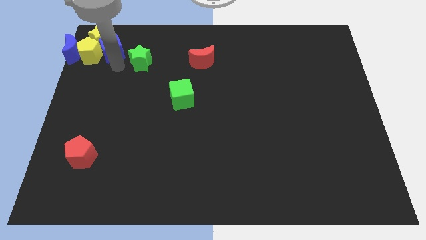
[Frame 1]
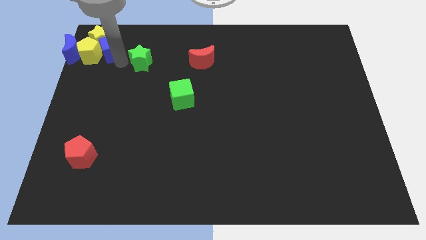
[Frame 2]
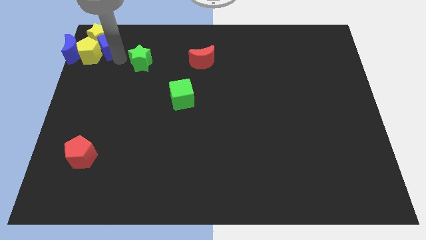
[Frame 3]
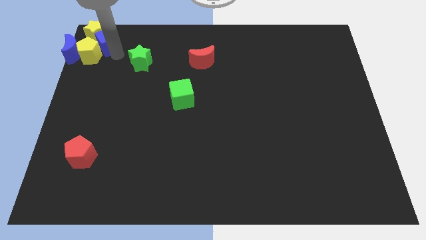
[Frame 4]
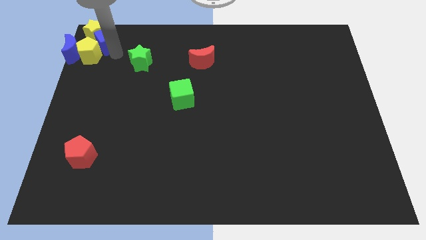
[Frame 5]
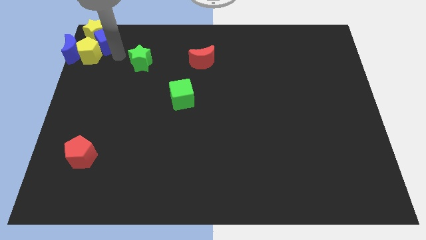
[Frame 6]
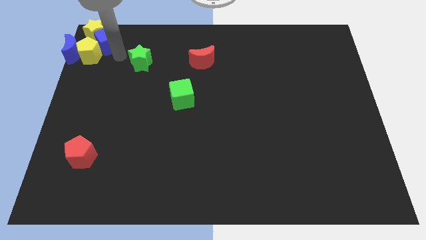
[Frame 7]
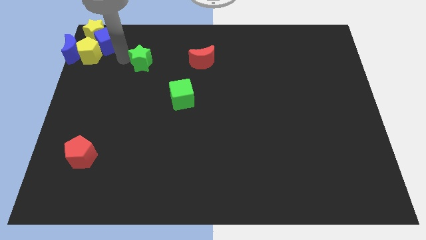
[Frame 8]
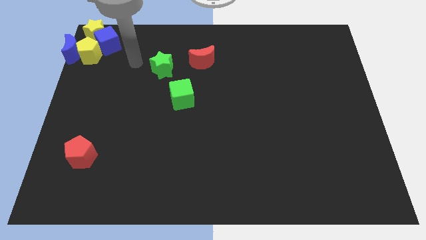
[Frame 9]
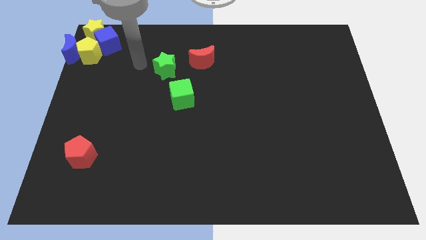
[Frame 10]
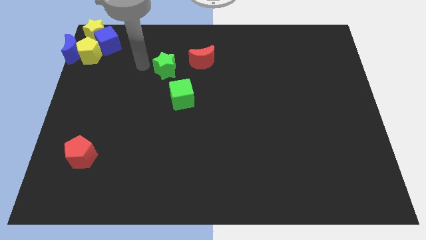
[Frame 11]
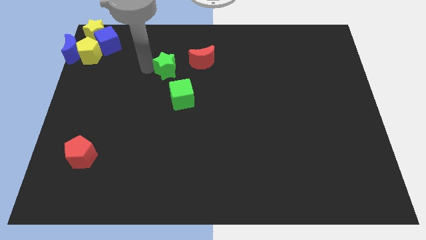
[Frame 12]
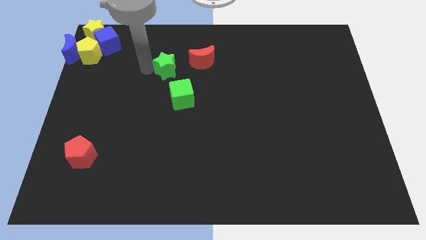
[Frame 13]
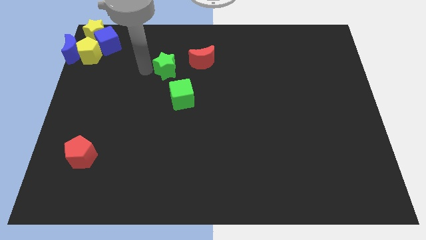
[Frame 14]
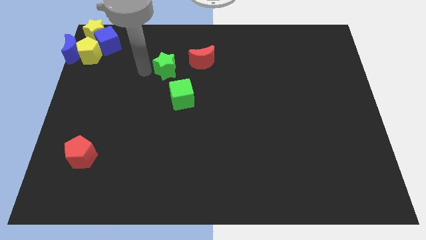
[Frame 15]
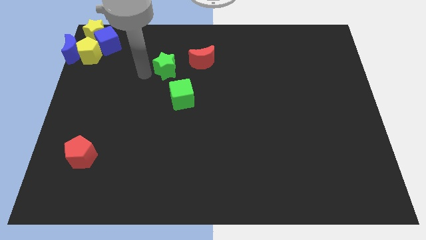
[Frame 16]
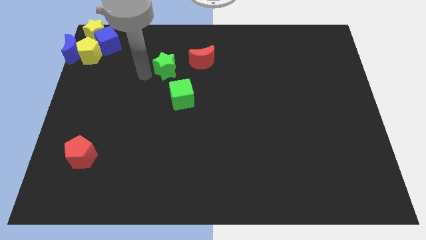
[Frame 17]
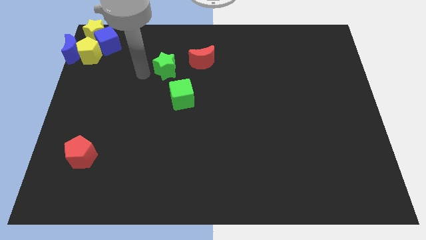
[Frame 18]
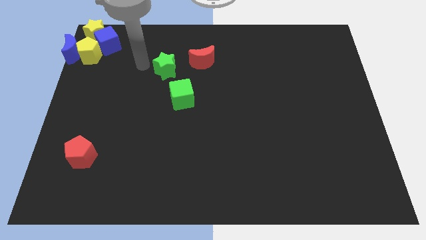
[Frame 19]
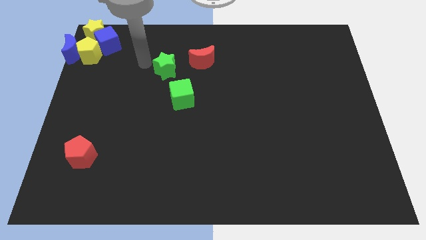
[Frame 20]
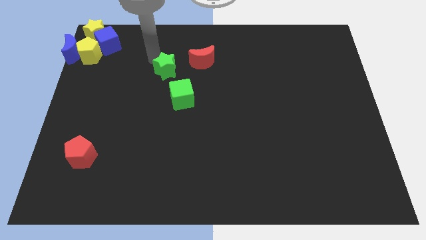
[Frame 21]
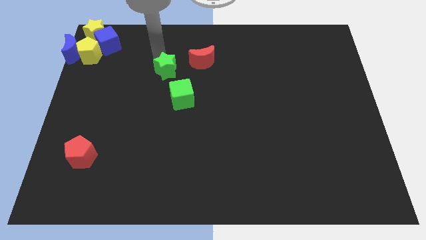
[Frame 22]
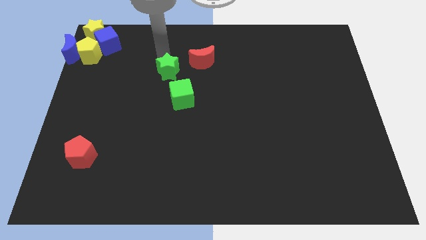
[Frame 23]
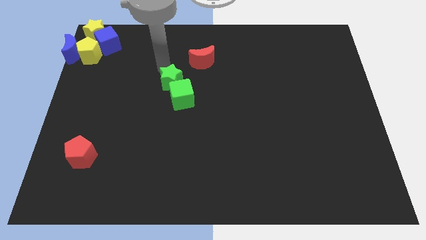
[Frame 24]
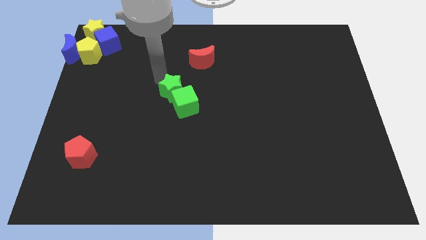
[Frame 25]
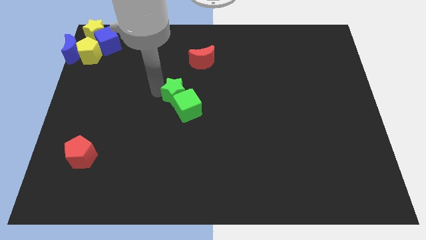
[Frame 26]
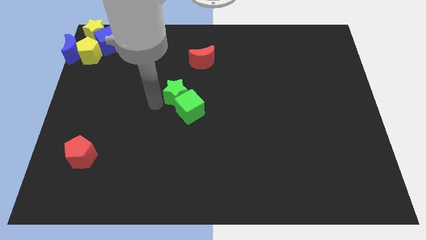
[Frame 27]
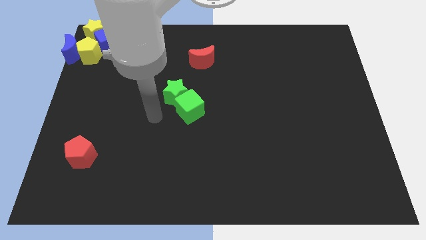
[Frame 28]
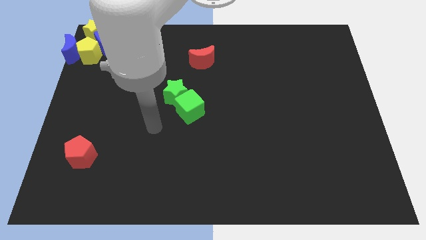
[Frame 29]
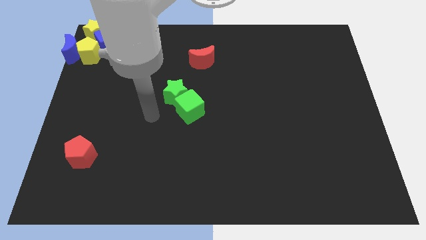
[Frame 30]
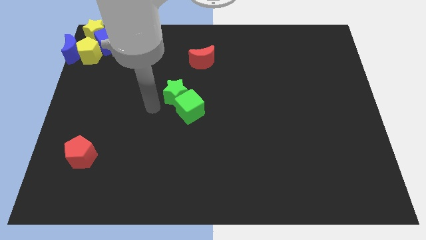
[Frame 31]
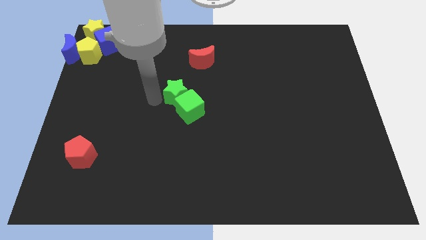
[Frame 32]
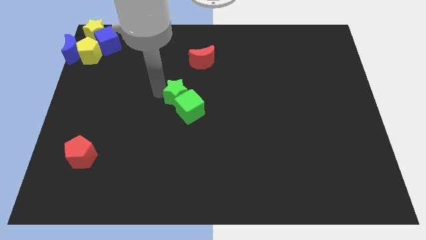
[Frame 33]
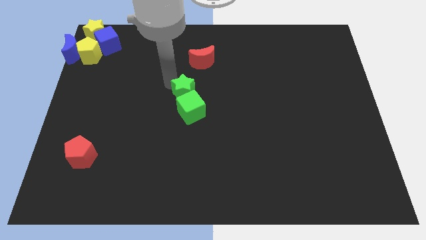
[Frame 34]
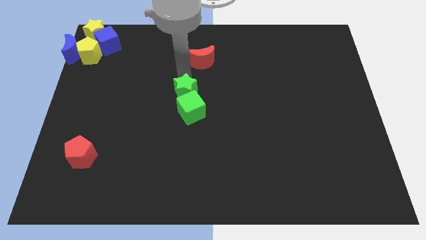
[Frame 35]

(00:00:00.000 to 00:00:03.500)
push the green star into the green cube

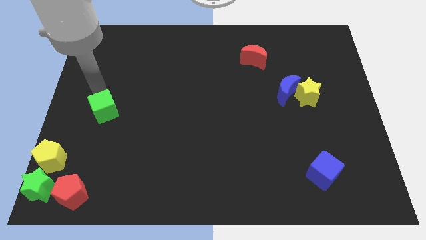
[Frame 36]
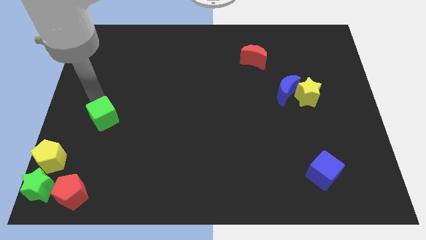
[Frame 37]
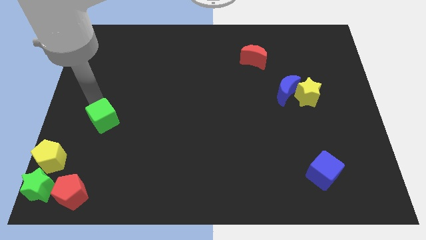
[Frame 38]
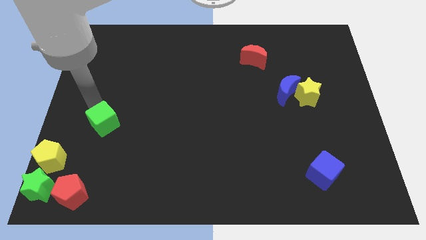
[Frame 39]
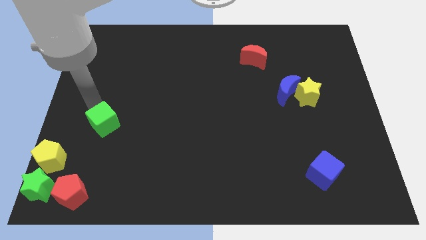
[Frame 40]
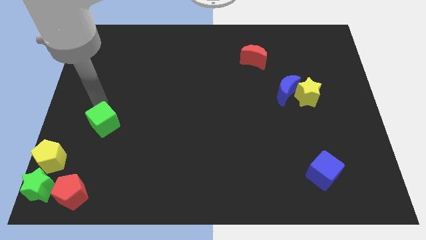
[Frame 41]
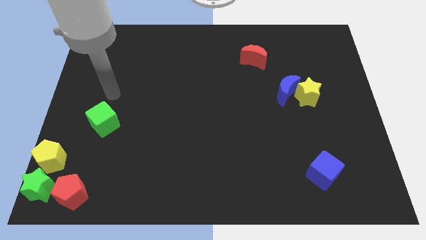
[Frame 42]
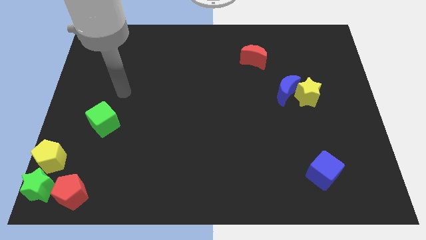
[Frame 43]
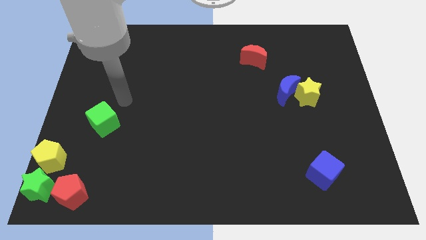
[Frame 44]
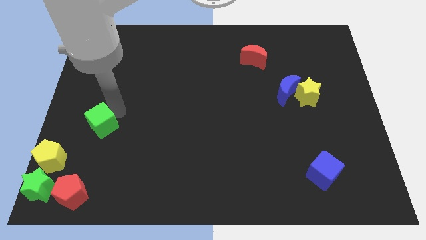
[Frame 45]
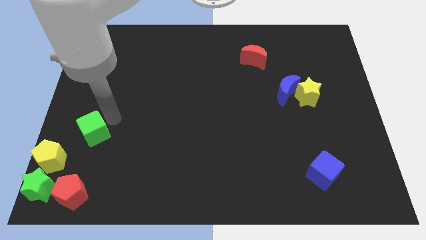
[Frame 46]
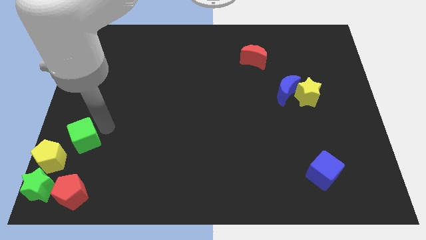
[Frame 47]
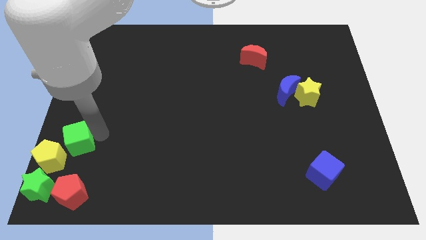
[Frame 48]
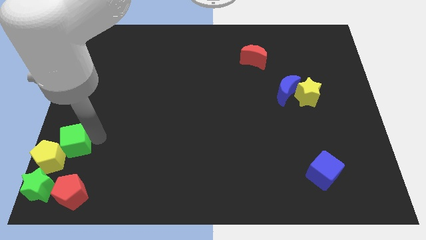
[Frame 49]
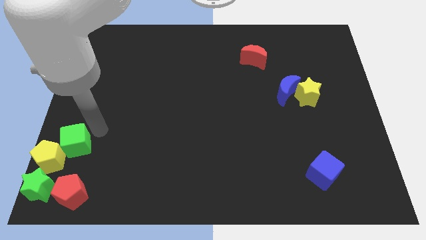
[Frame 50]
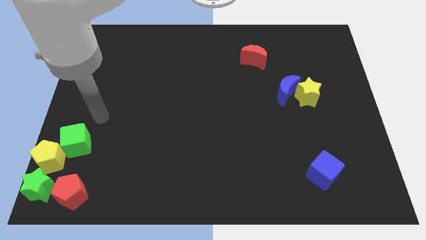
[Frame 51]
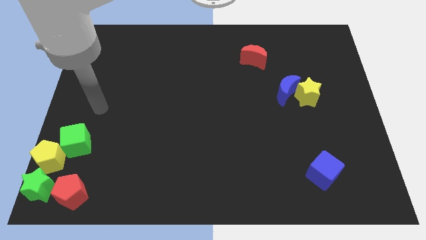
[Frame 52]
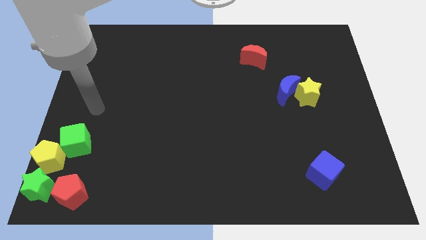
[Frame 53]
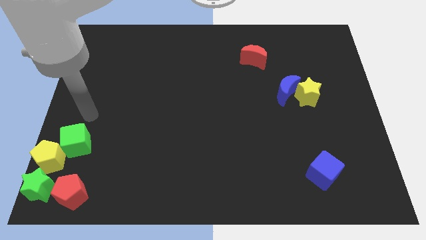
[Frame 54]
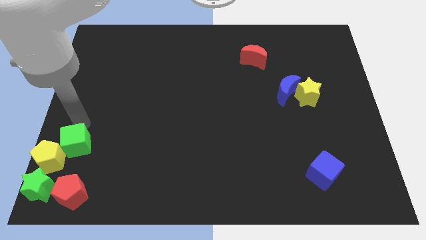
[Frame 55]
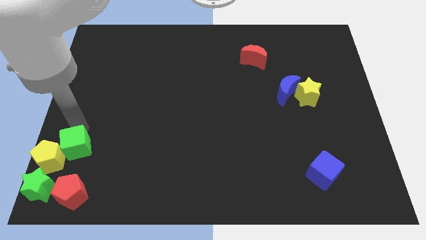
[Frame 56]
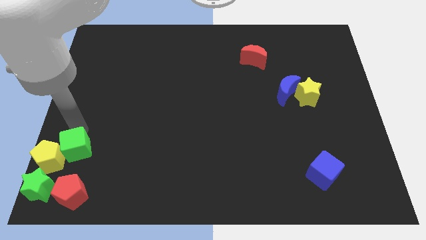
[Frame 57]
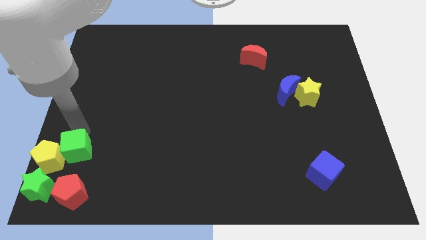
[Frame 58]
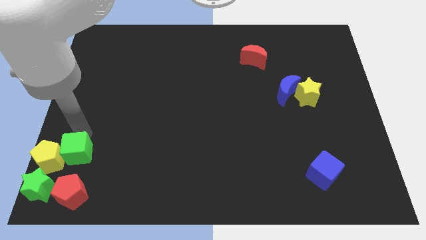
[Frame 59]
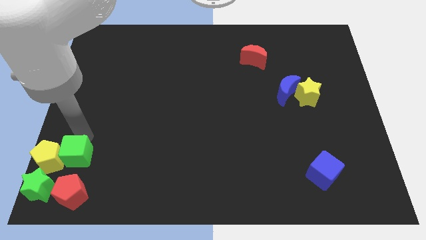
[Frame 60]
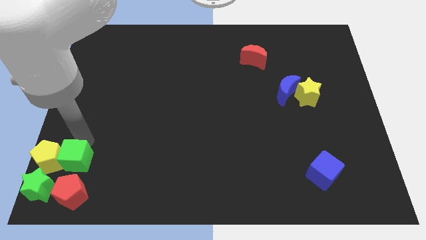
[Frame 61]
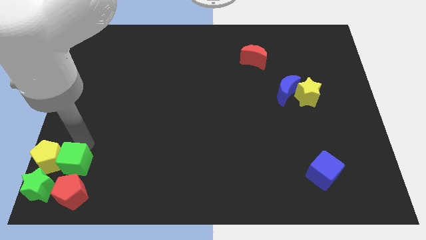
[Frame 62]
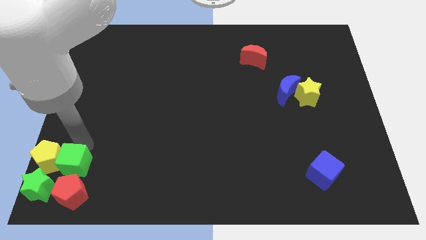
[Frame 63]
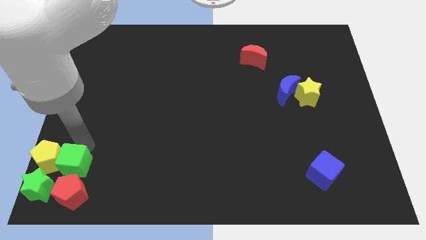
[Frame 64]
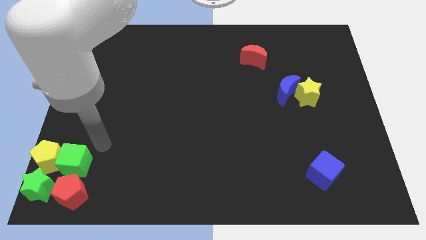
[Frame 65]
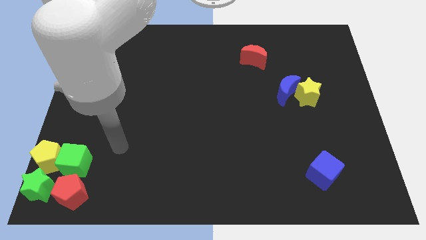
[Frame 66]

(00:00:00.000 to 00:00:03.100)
move the green cube above the red pentagon

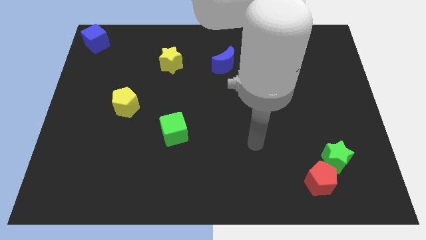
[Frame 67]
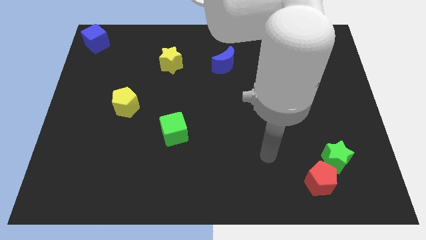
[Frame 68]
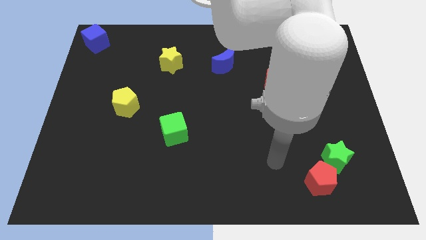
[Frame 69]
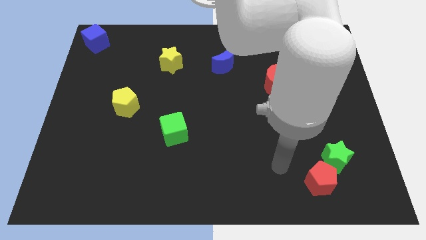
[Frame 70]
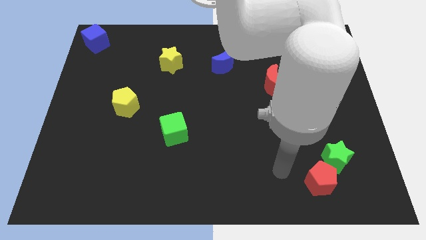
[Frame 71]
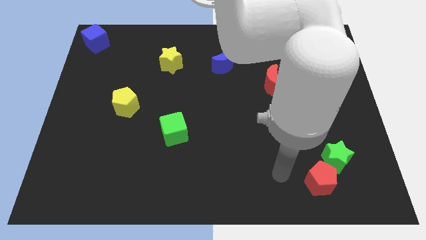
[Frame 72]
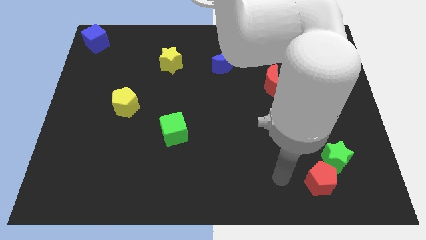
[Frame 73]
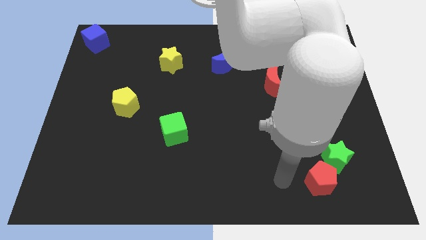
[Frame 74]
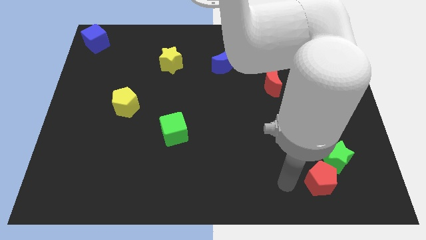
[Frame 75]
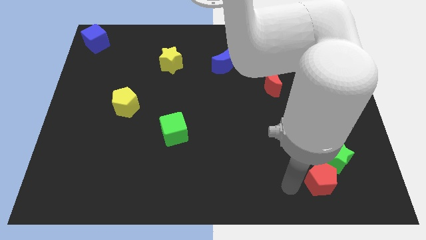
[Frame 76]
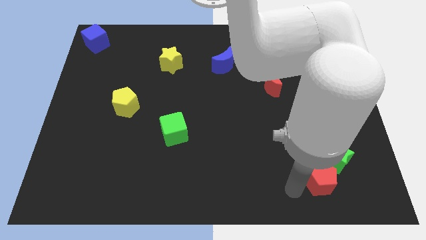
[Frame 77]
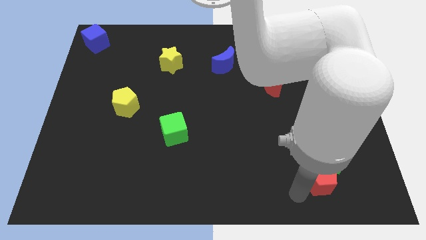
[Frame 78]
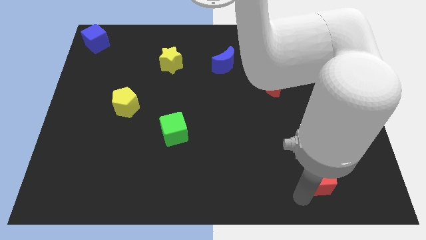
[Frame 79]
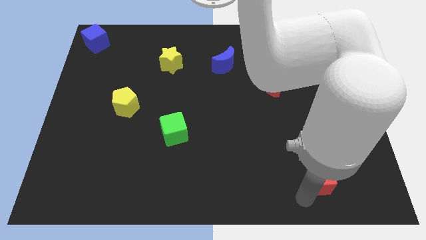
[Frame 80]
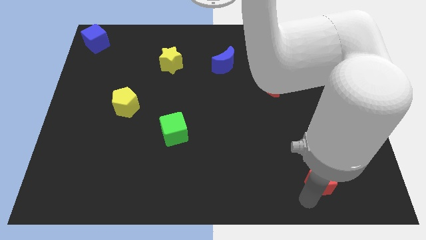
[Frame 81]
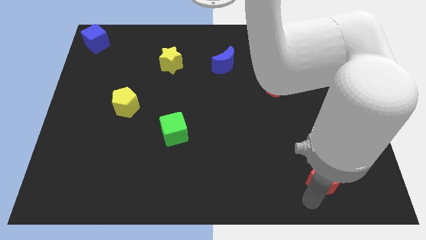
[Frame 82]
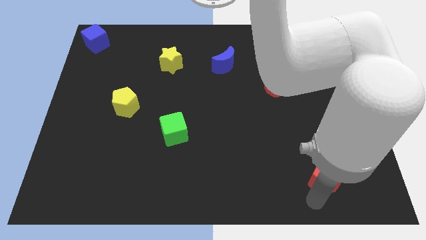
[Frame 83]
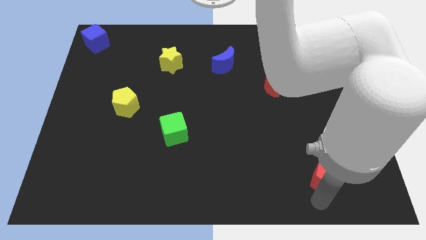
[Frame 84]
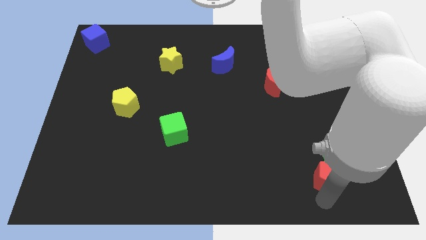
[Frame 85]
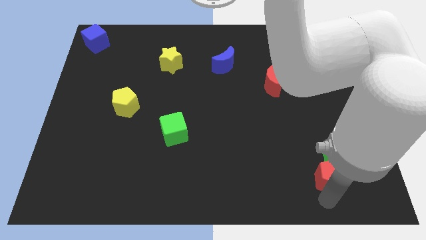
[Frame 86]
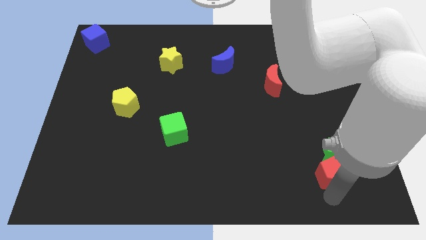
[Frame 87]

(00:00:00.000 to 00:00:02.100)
move the red pentagon into the green star

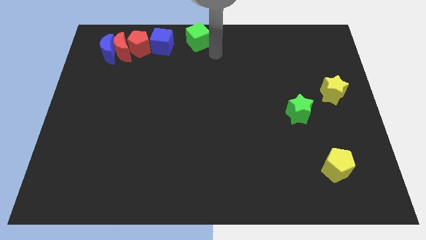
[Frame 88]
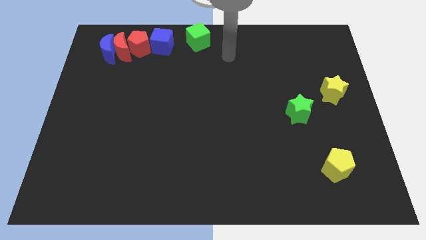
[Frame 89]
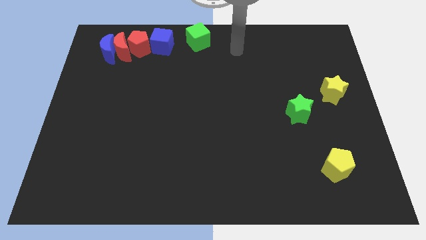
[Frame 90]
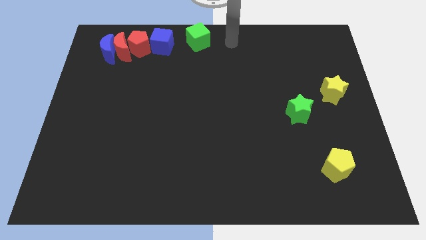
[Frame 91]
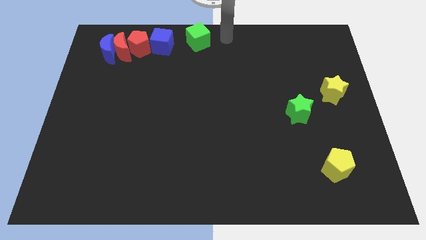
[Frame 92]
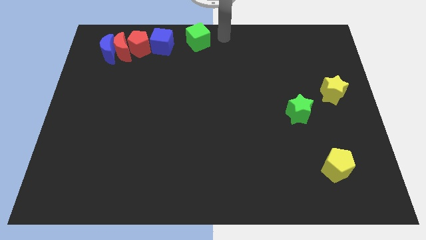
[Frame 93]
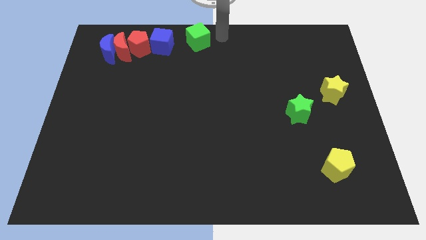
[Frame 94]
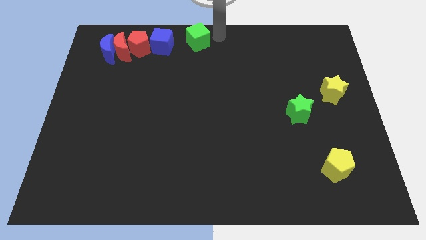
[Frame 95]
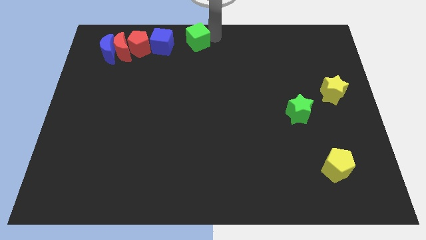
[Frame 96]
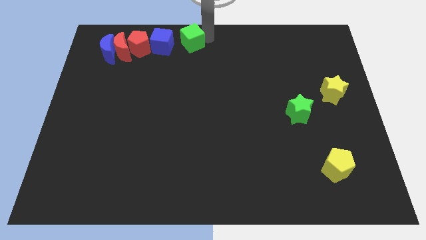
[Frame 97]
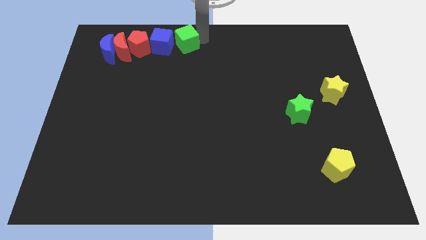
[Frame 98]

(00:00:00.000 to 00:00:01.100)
slide green cube towards blue cube
